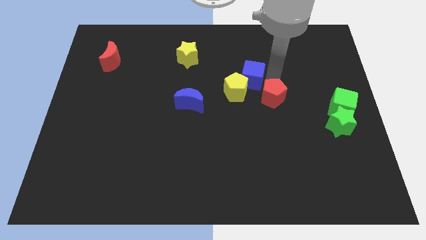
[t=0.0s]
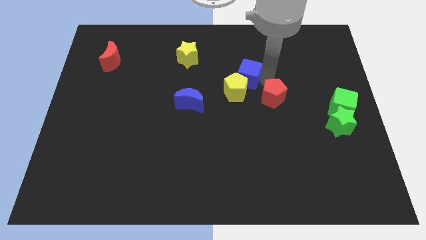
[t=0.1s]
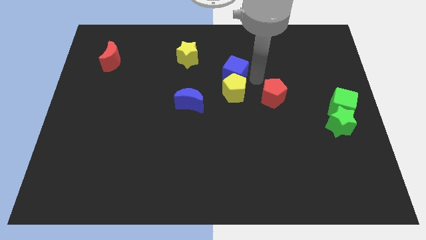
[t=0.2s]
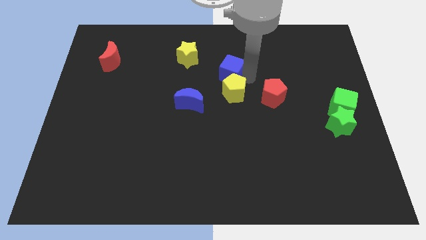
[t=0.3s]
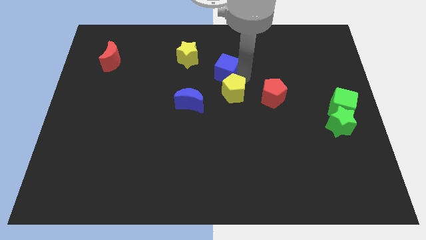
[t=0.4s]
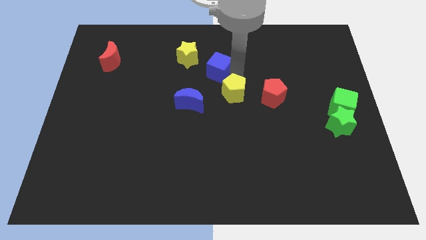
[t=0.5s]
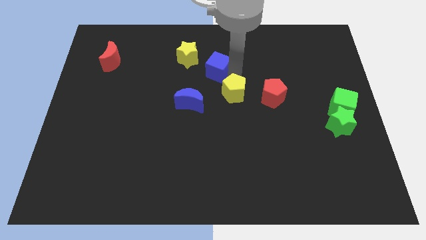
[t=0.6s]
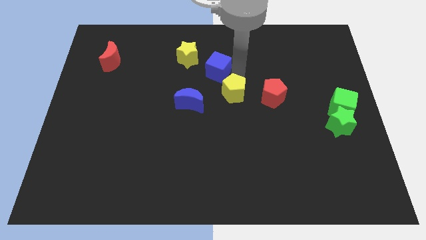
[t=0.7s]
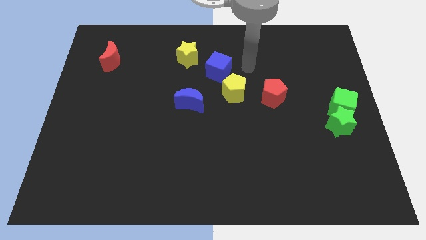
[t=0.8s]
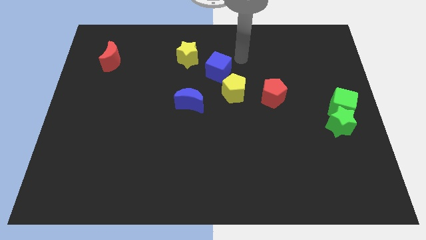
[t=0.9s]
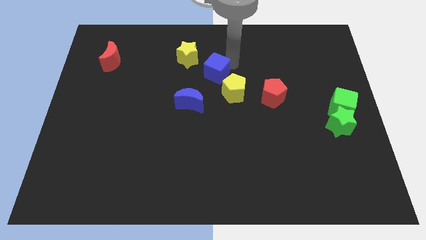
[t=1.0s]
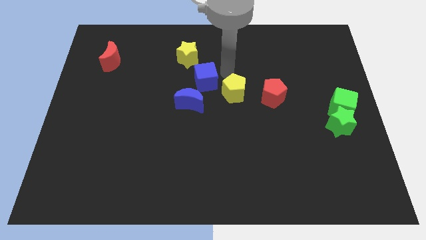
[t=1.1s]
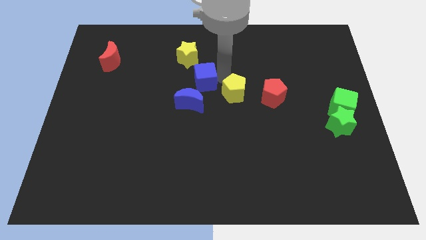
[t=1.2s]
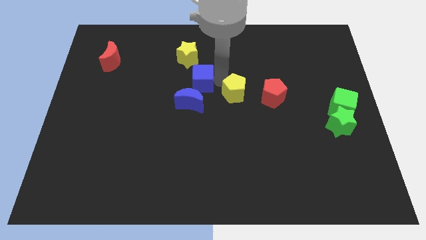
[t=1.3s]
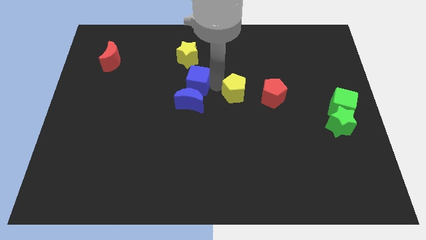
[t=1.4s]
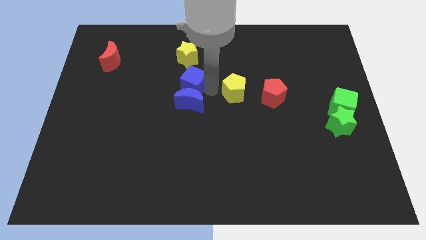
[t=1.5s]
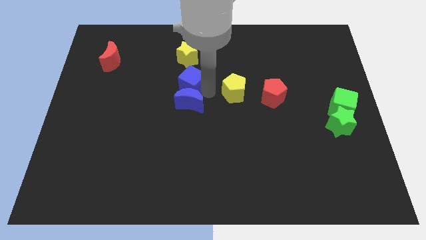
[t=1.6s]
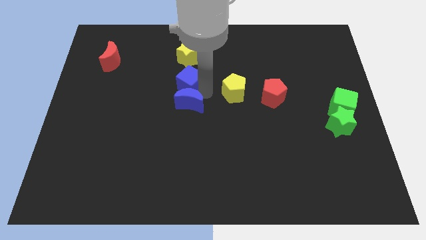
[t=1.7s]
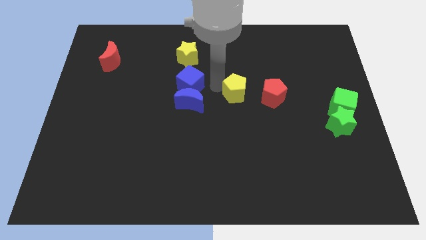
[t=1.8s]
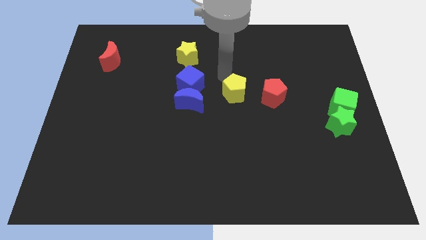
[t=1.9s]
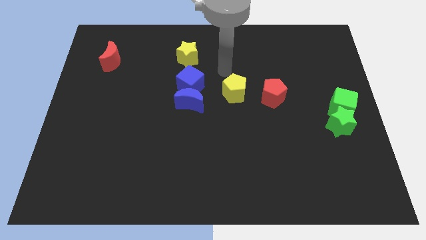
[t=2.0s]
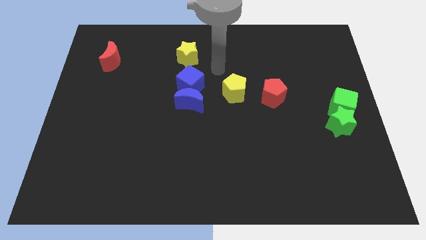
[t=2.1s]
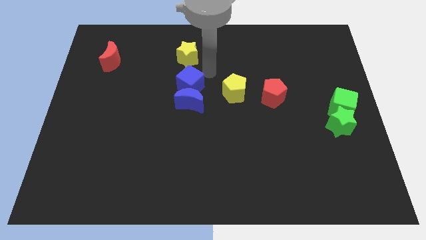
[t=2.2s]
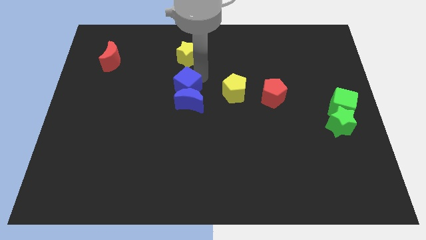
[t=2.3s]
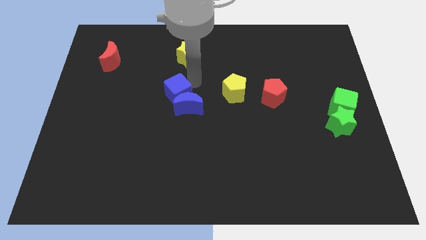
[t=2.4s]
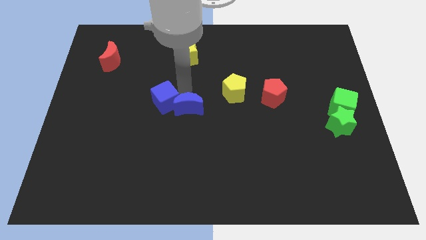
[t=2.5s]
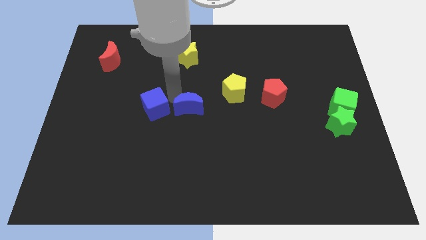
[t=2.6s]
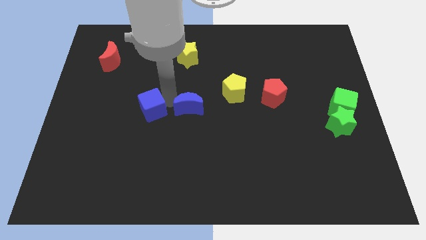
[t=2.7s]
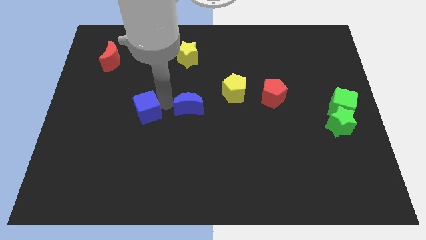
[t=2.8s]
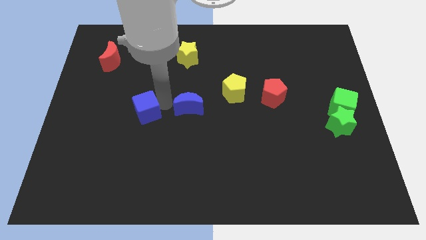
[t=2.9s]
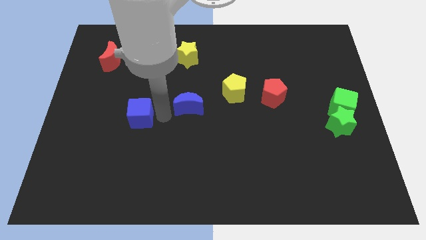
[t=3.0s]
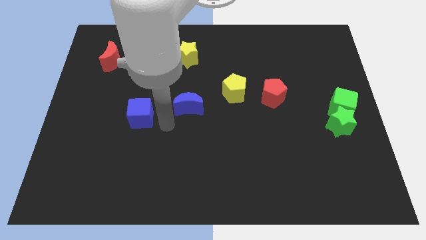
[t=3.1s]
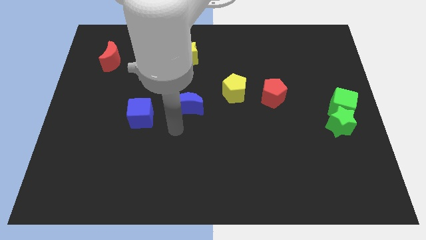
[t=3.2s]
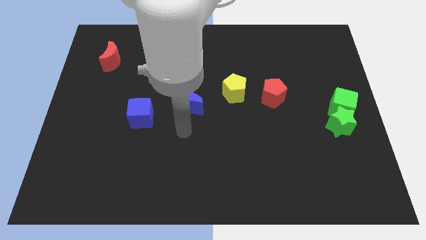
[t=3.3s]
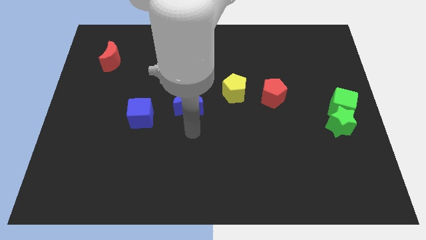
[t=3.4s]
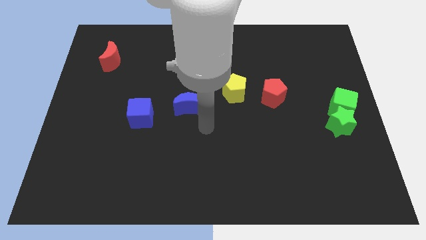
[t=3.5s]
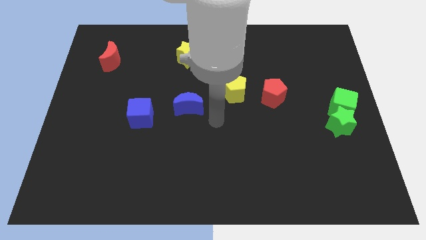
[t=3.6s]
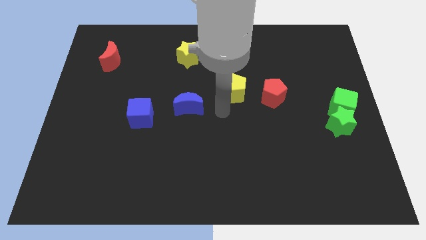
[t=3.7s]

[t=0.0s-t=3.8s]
move the blue cube bottom left to the yellow star

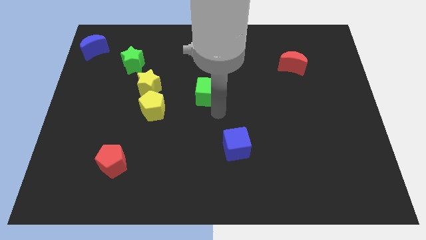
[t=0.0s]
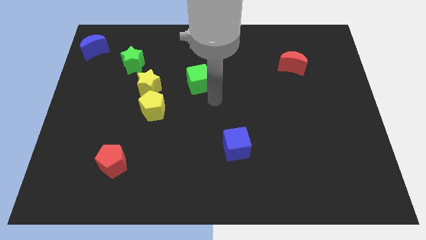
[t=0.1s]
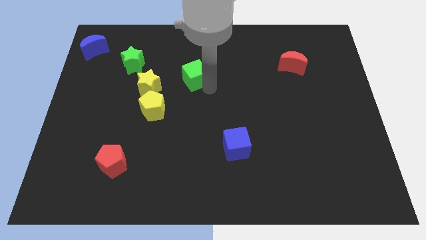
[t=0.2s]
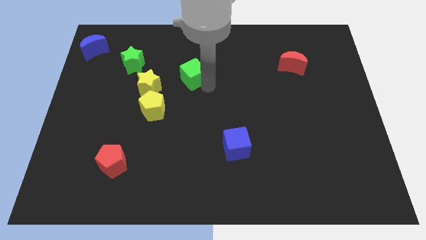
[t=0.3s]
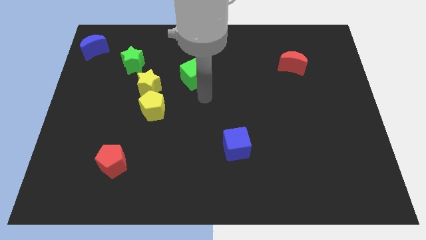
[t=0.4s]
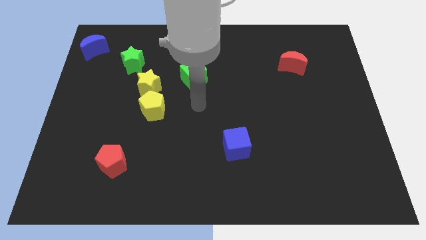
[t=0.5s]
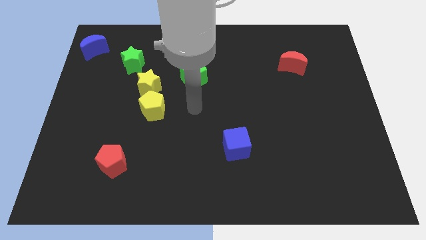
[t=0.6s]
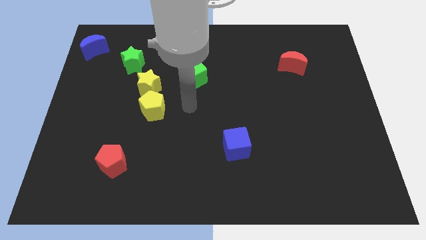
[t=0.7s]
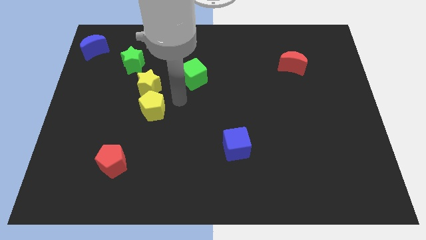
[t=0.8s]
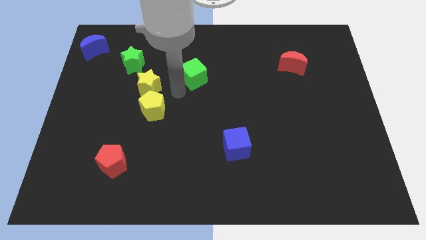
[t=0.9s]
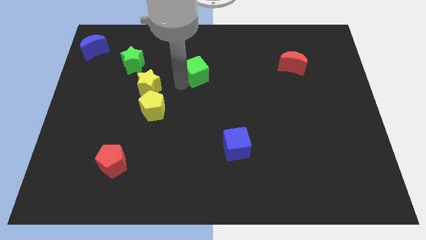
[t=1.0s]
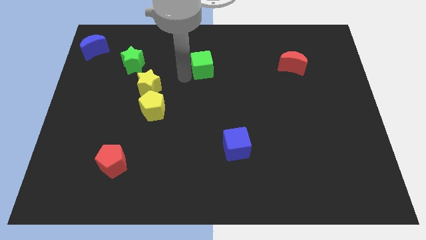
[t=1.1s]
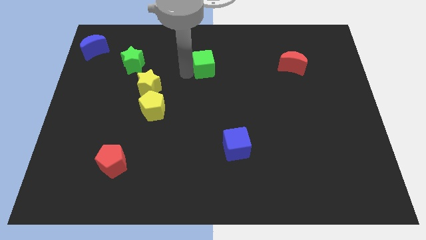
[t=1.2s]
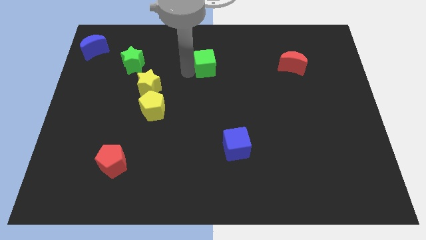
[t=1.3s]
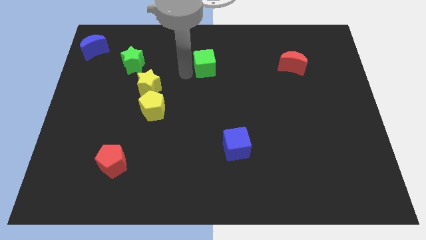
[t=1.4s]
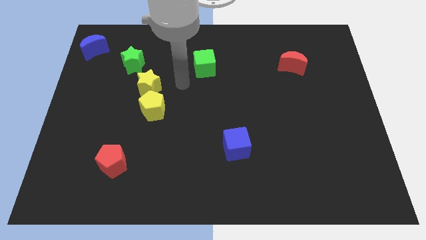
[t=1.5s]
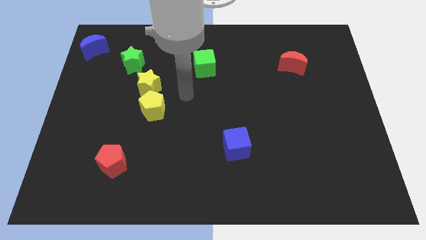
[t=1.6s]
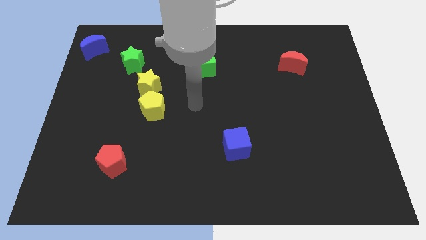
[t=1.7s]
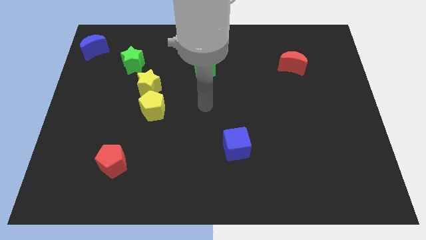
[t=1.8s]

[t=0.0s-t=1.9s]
push the green cube towards the top of the board

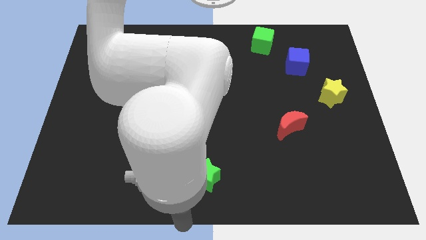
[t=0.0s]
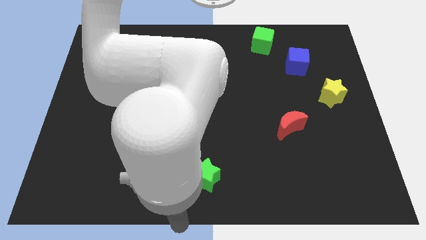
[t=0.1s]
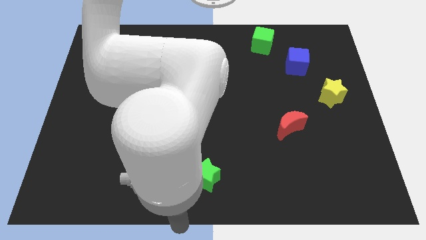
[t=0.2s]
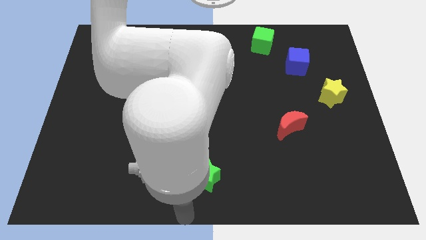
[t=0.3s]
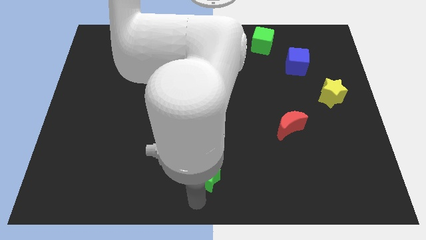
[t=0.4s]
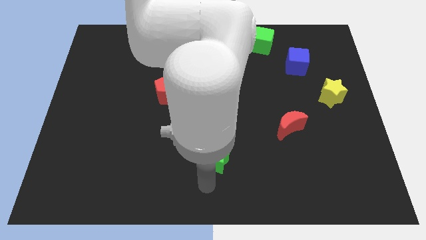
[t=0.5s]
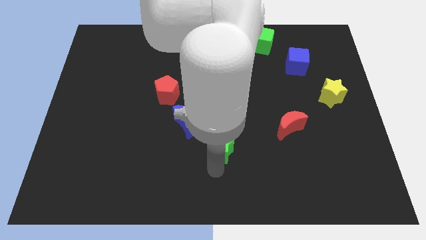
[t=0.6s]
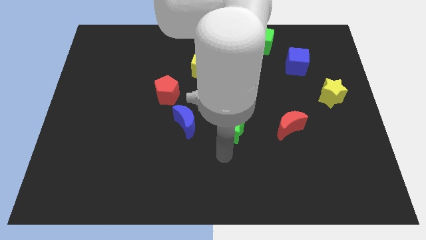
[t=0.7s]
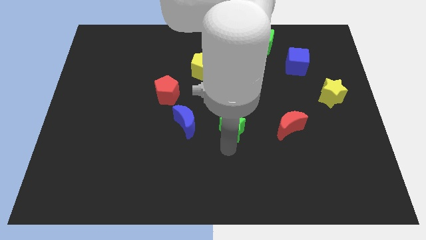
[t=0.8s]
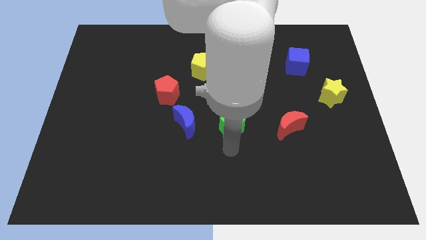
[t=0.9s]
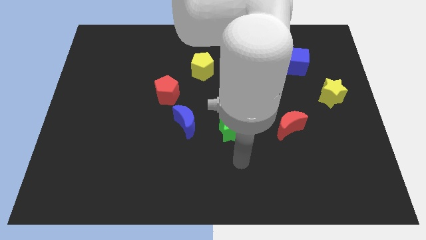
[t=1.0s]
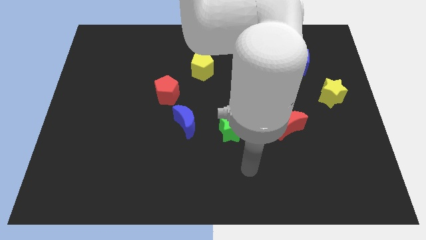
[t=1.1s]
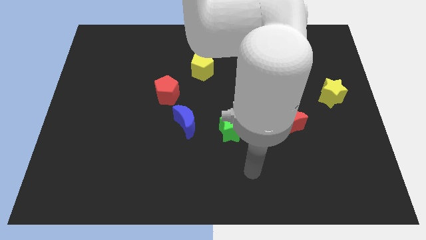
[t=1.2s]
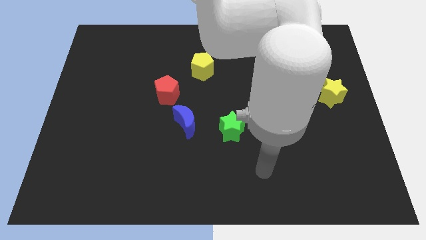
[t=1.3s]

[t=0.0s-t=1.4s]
push green star in between the blue moon and red moon

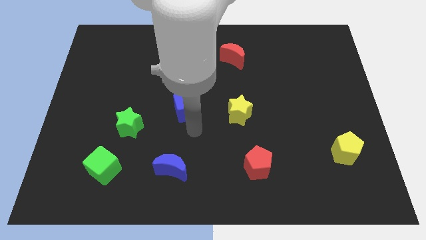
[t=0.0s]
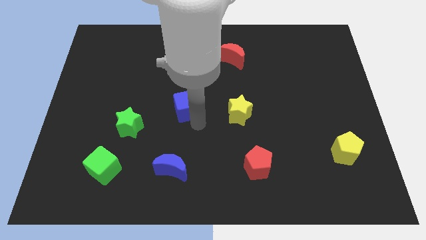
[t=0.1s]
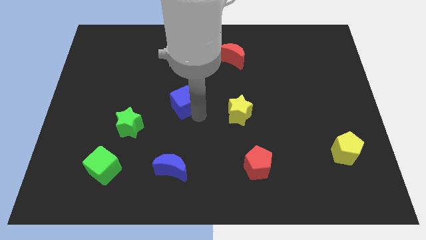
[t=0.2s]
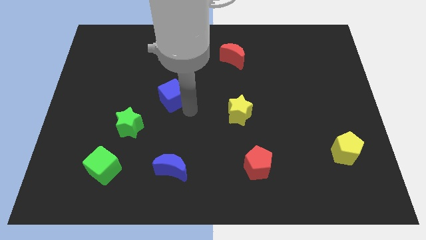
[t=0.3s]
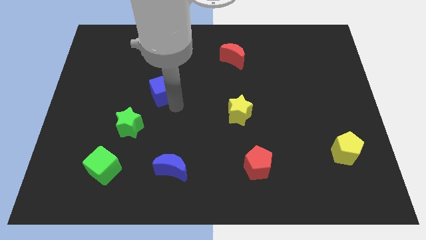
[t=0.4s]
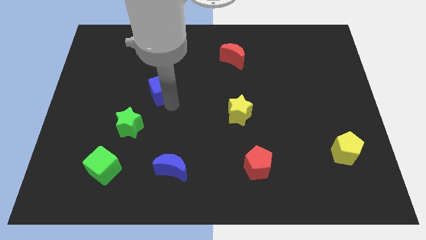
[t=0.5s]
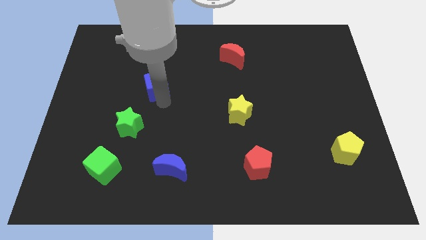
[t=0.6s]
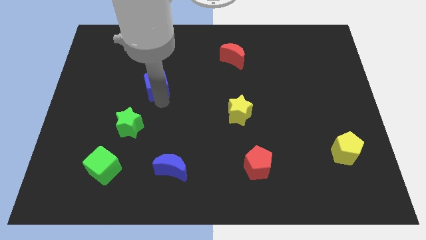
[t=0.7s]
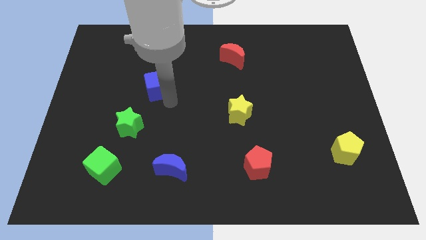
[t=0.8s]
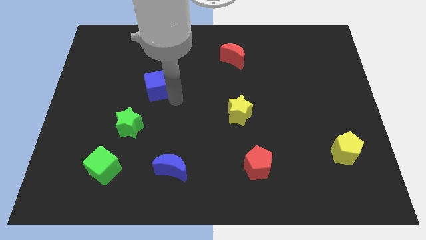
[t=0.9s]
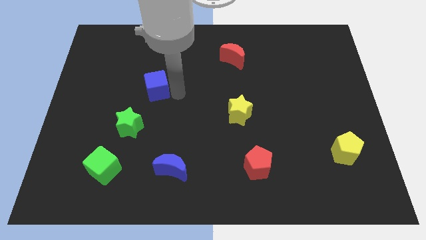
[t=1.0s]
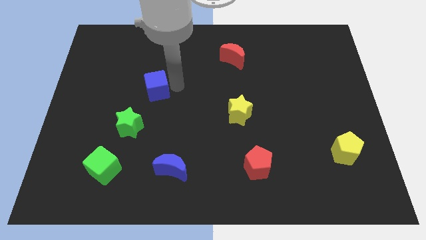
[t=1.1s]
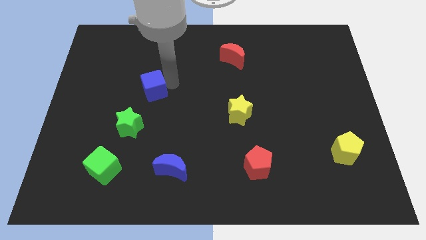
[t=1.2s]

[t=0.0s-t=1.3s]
move the blue cube diagonally on the top right side of the green star

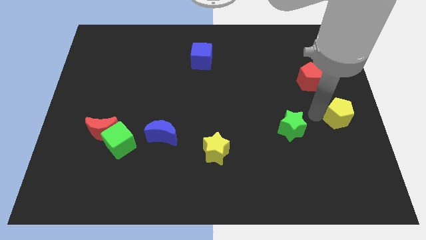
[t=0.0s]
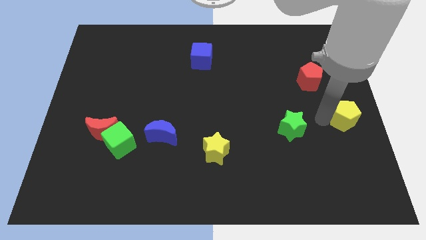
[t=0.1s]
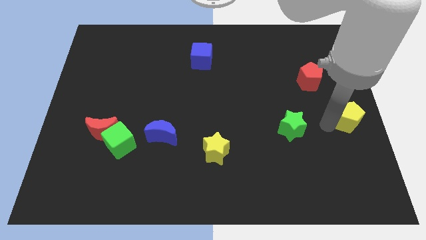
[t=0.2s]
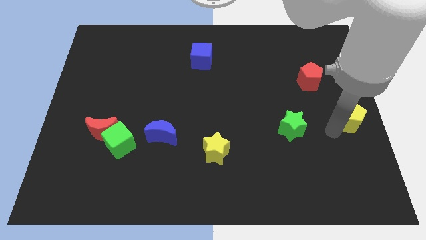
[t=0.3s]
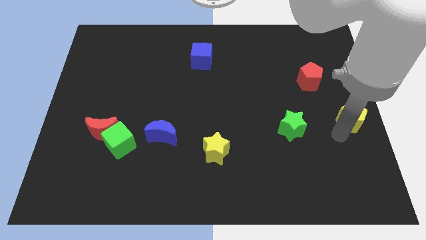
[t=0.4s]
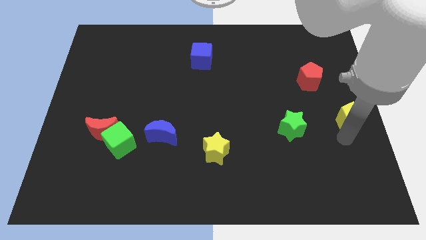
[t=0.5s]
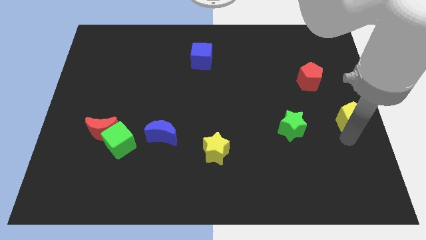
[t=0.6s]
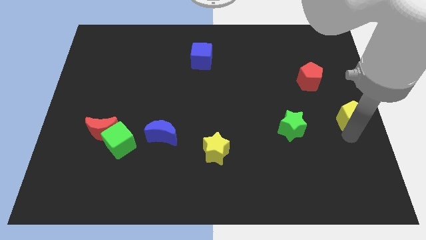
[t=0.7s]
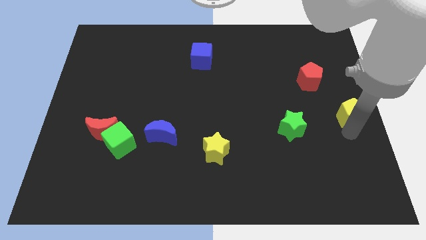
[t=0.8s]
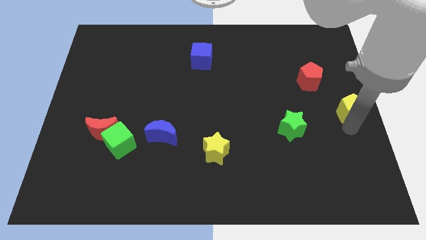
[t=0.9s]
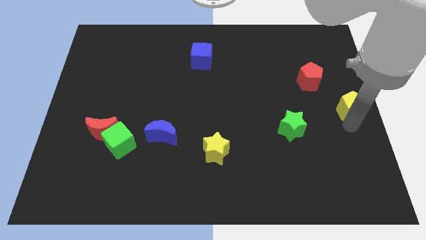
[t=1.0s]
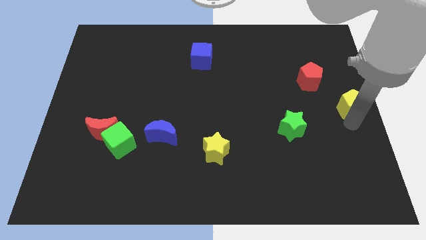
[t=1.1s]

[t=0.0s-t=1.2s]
move the yellow pentagon to the center right
